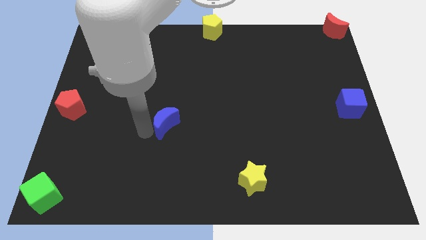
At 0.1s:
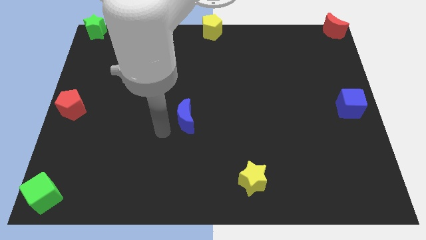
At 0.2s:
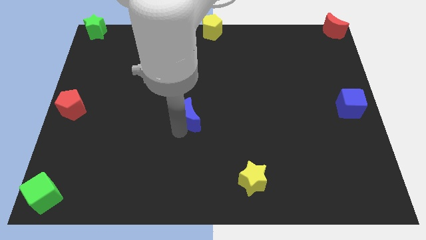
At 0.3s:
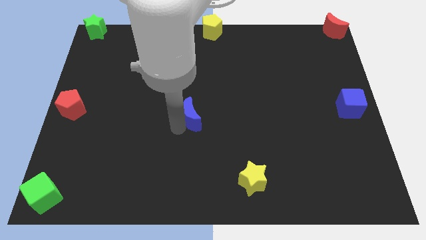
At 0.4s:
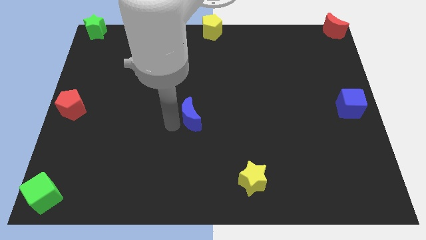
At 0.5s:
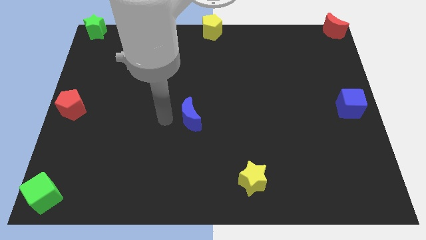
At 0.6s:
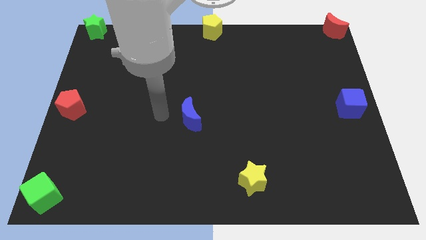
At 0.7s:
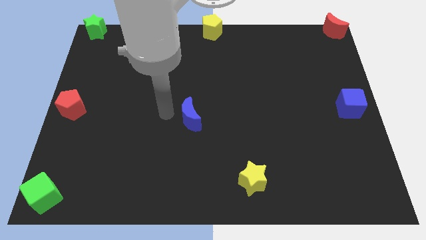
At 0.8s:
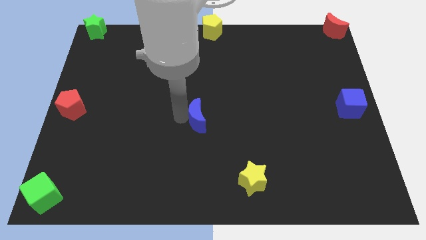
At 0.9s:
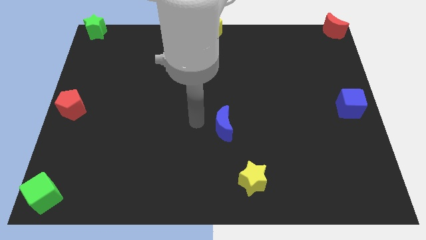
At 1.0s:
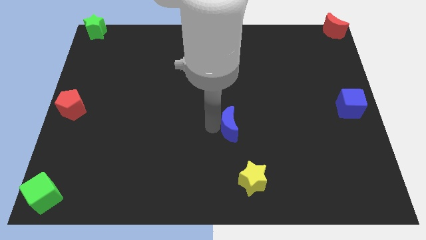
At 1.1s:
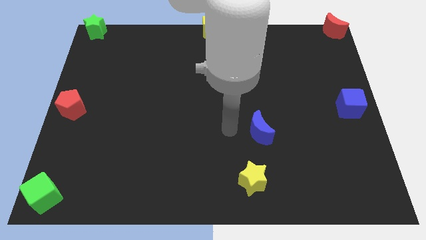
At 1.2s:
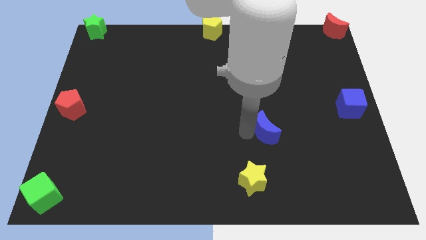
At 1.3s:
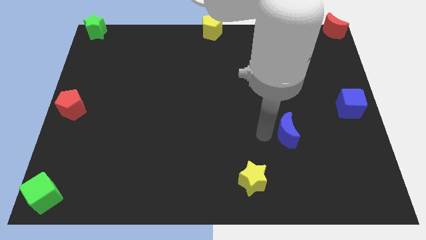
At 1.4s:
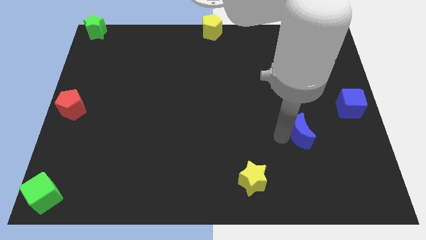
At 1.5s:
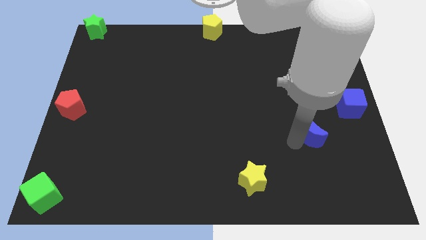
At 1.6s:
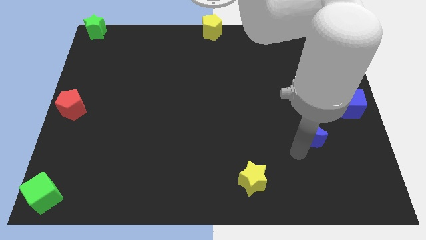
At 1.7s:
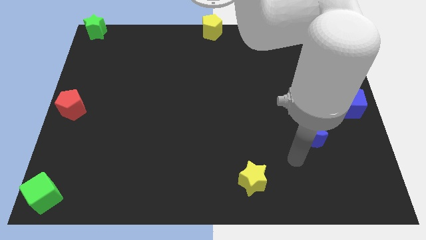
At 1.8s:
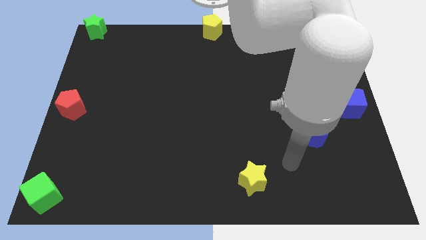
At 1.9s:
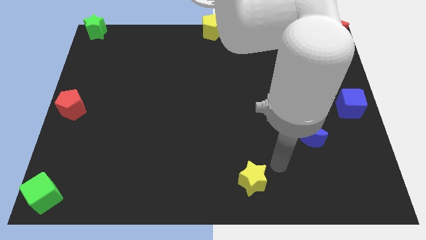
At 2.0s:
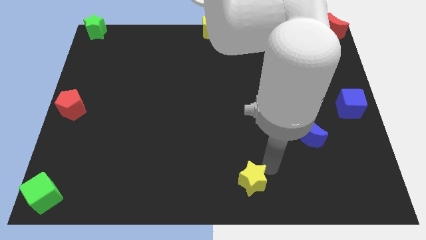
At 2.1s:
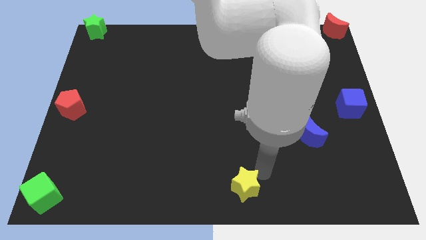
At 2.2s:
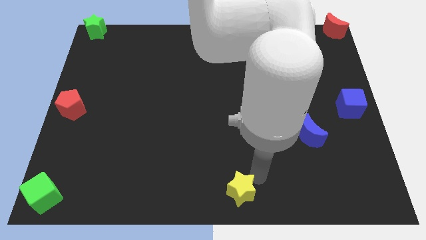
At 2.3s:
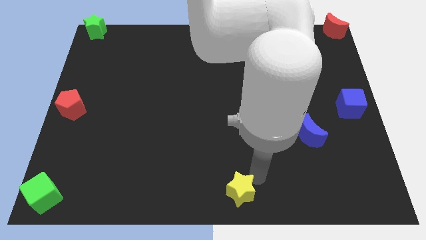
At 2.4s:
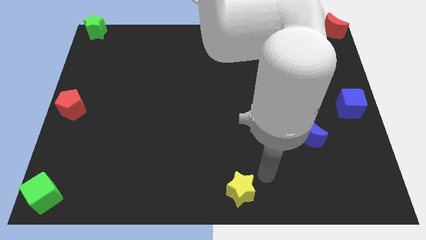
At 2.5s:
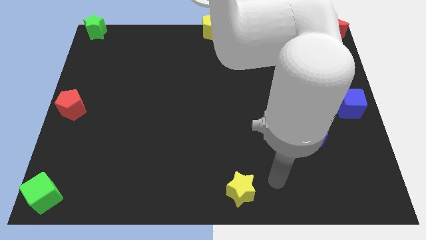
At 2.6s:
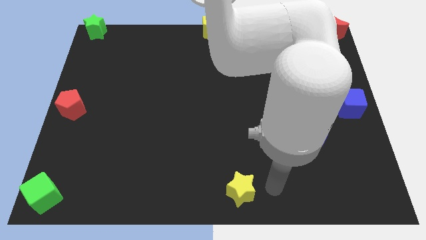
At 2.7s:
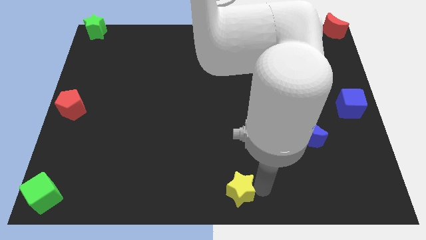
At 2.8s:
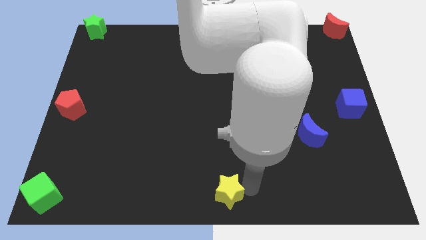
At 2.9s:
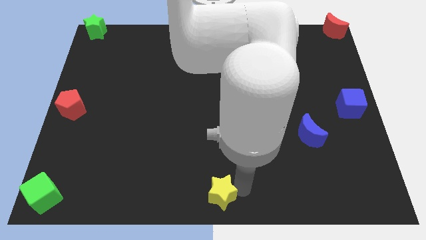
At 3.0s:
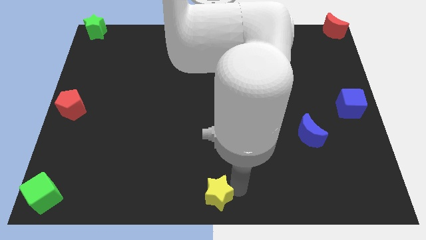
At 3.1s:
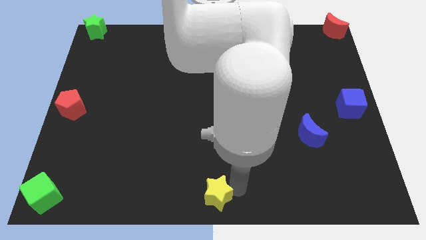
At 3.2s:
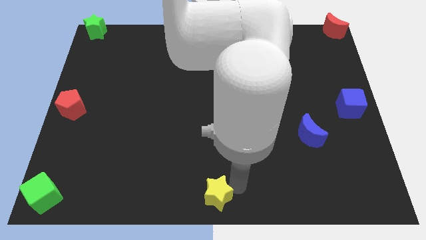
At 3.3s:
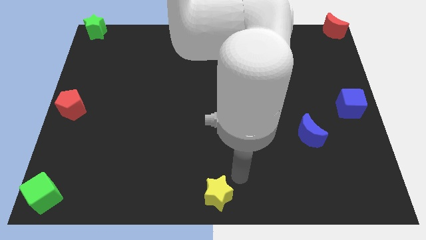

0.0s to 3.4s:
place a yellow star towards the bottom middle end

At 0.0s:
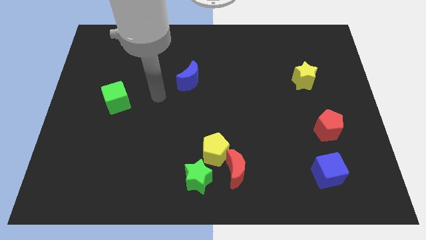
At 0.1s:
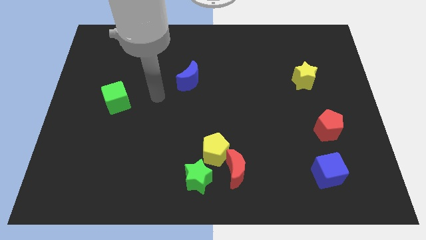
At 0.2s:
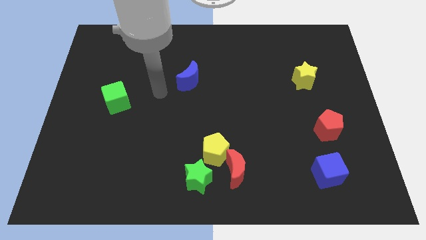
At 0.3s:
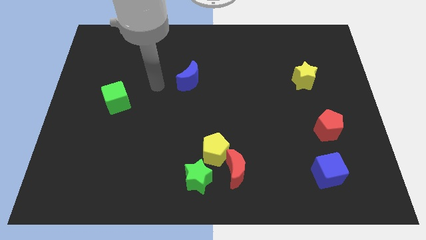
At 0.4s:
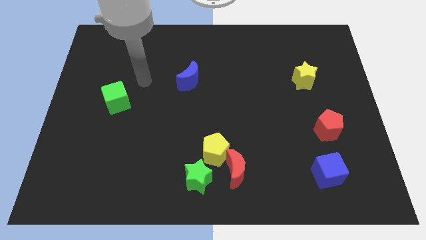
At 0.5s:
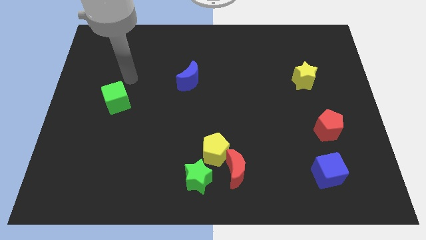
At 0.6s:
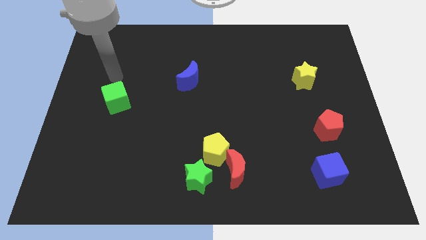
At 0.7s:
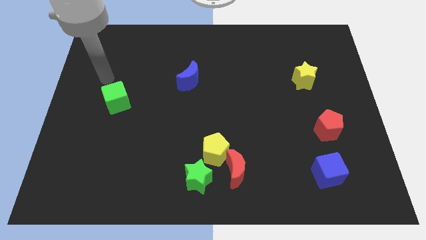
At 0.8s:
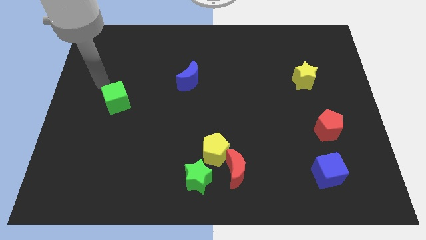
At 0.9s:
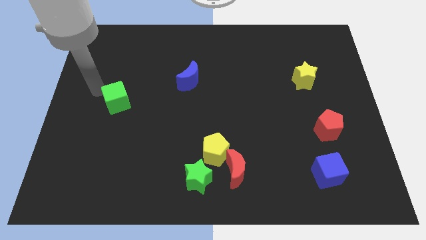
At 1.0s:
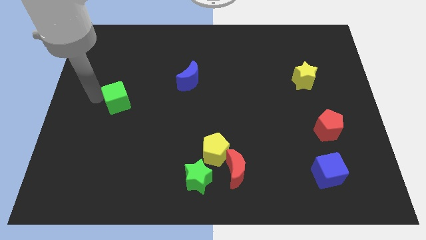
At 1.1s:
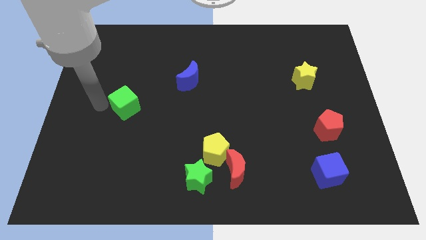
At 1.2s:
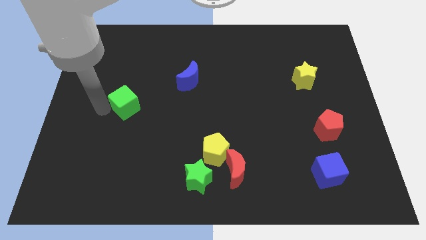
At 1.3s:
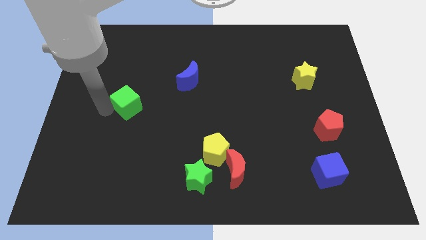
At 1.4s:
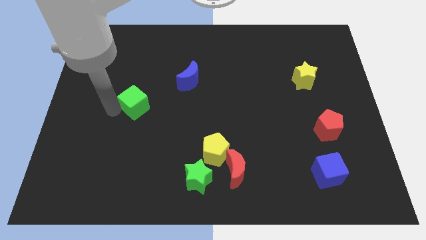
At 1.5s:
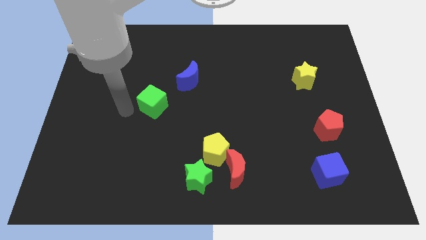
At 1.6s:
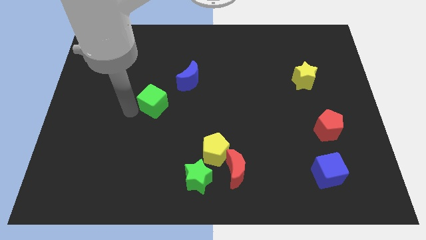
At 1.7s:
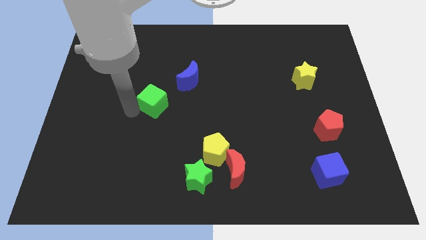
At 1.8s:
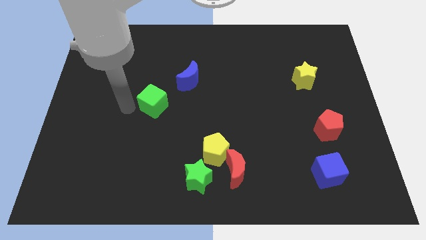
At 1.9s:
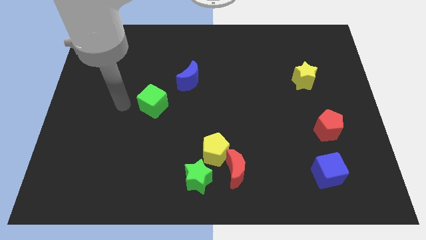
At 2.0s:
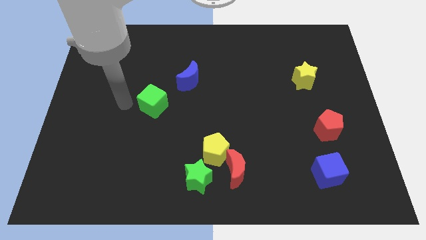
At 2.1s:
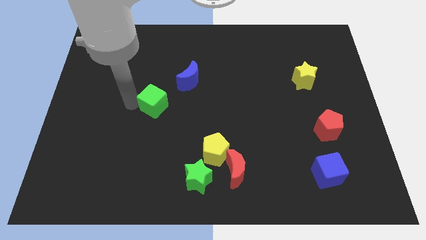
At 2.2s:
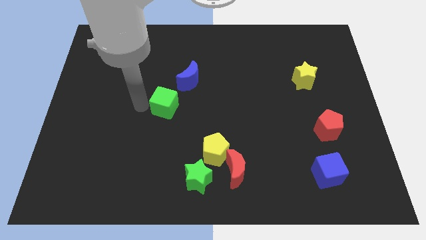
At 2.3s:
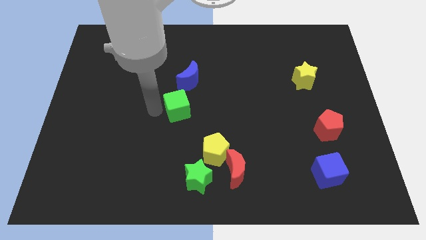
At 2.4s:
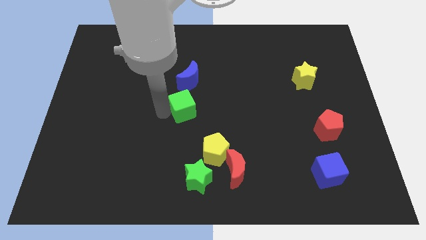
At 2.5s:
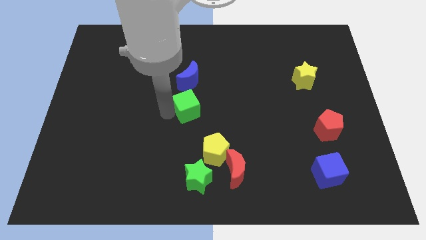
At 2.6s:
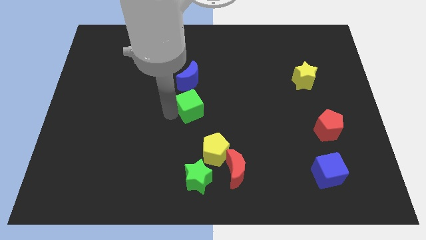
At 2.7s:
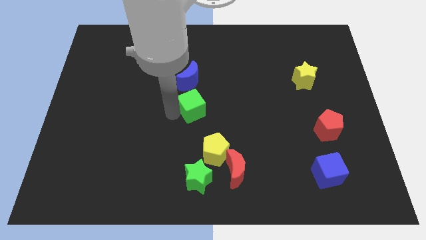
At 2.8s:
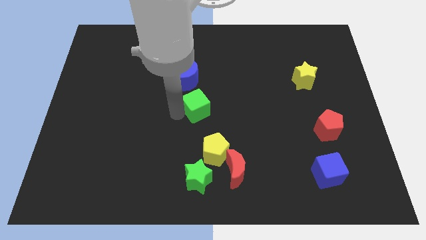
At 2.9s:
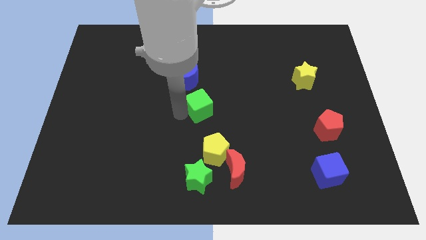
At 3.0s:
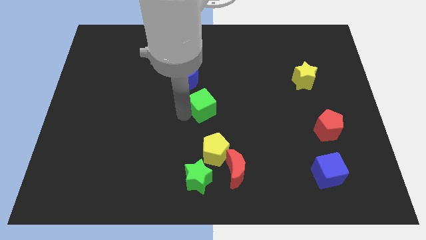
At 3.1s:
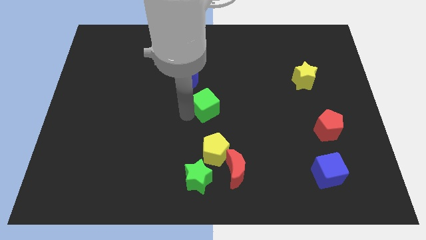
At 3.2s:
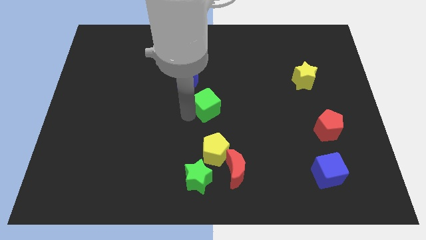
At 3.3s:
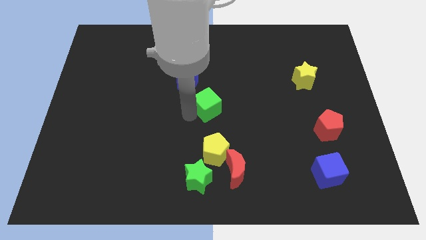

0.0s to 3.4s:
put the green cube at the center of the board

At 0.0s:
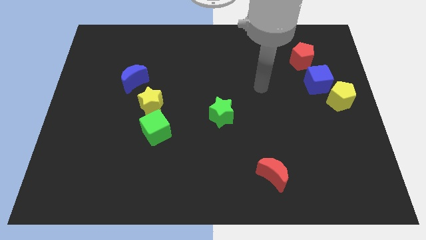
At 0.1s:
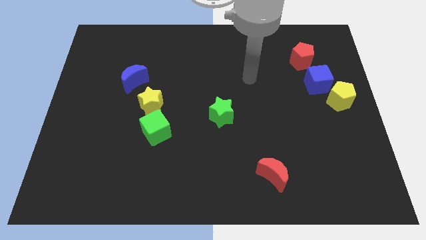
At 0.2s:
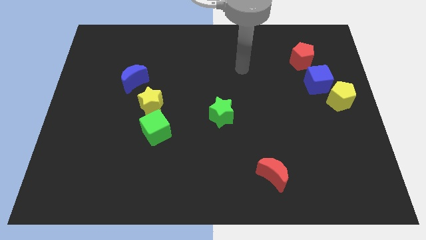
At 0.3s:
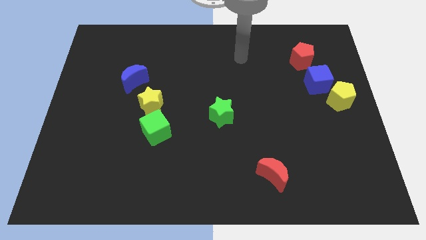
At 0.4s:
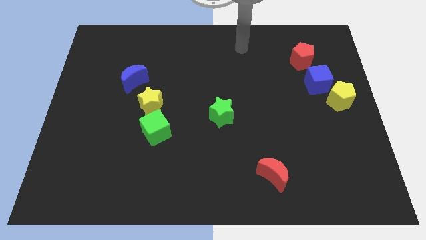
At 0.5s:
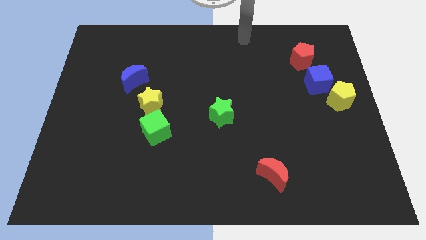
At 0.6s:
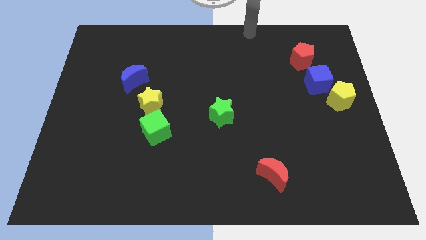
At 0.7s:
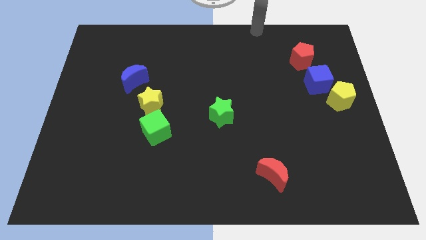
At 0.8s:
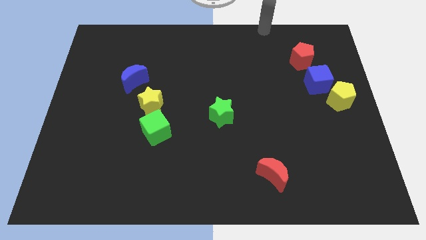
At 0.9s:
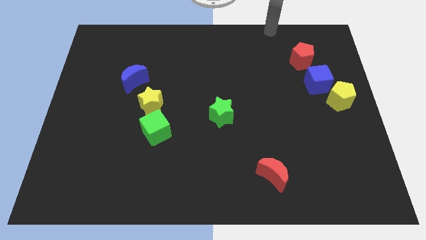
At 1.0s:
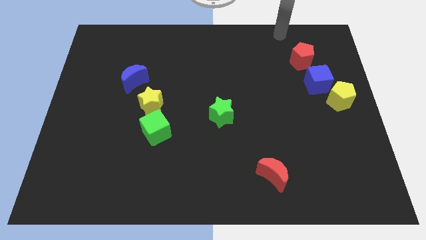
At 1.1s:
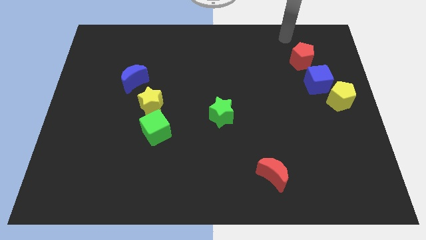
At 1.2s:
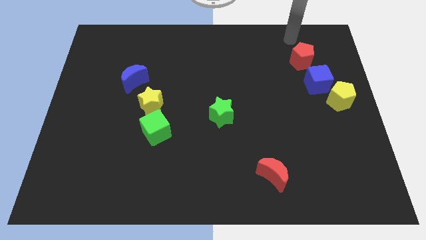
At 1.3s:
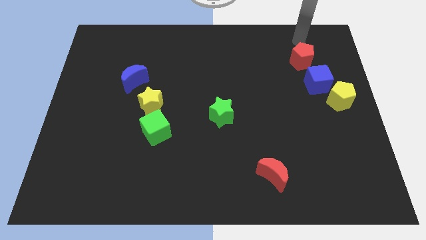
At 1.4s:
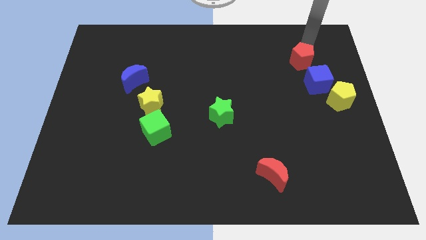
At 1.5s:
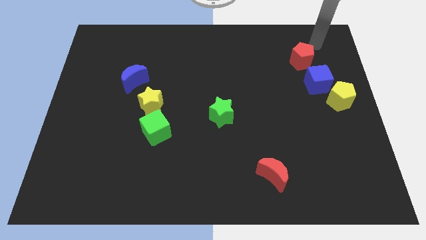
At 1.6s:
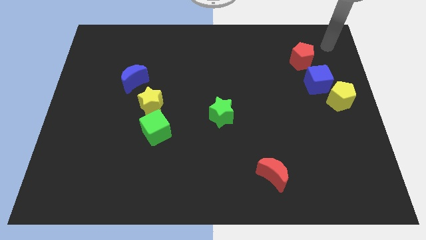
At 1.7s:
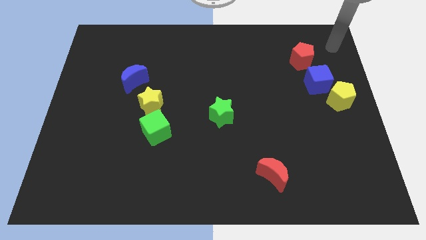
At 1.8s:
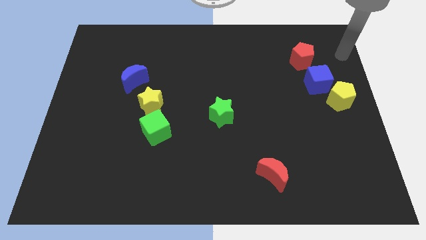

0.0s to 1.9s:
point your arm diagonal above the blue cube

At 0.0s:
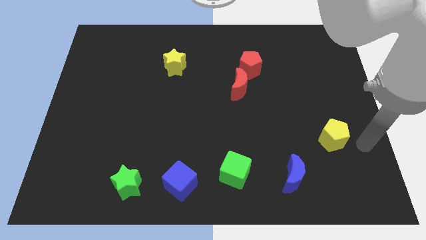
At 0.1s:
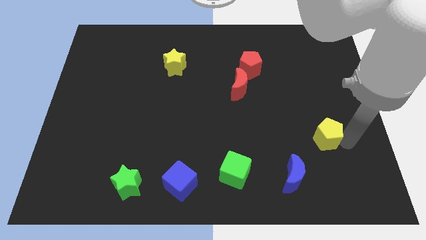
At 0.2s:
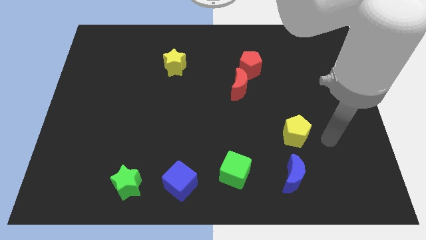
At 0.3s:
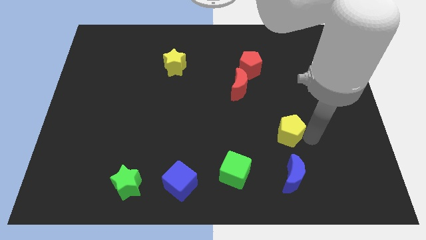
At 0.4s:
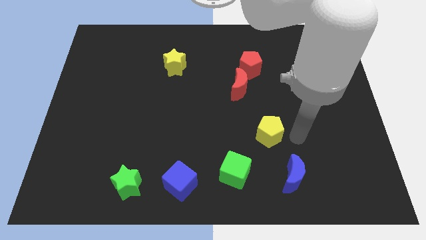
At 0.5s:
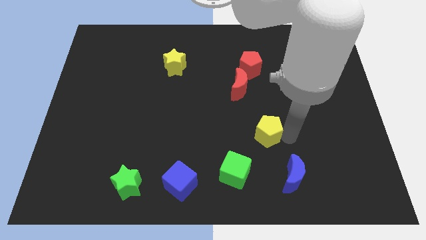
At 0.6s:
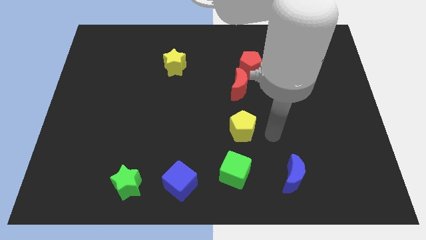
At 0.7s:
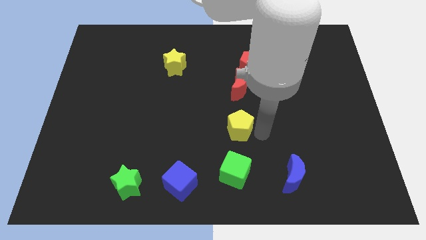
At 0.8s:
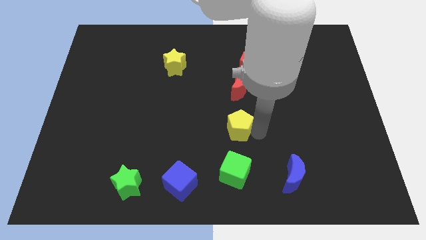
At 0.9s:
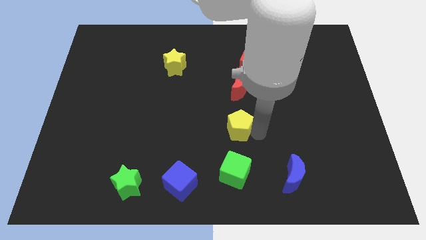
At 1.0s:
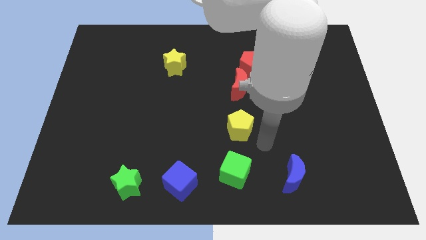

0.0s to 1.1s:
push the yellow pentagon towards the top of the green cube
